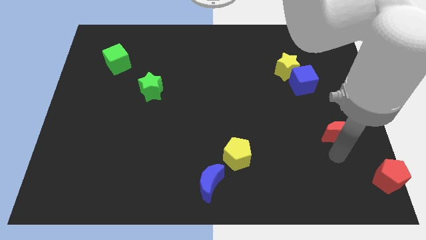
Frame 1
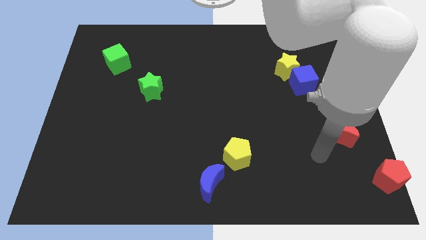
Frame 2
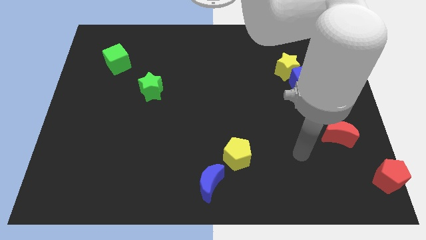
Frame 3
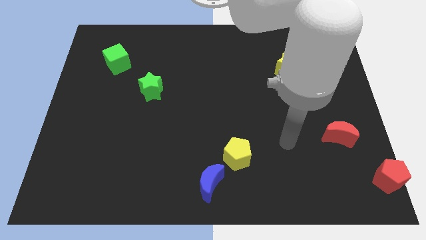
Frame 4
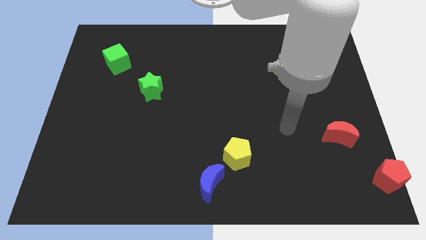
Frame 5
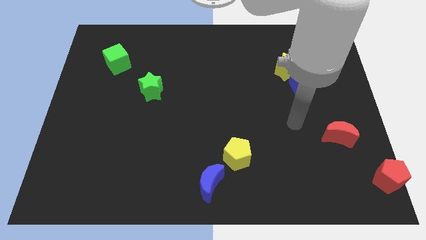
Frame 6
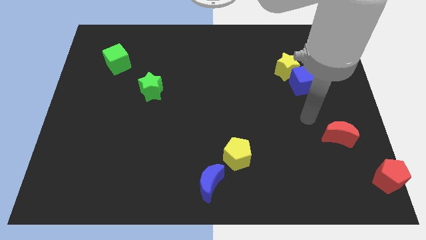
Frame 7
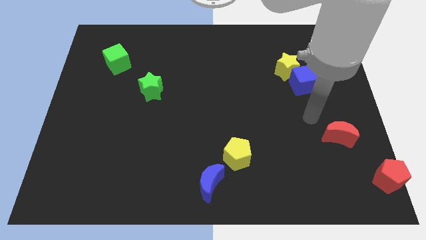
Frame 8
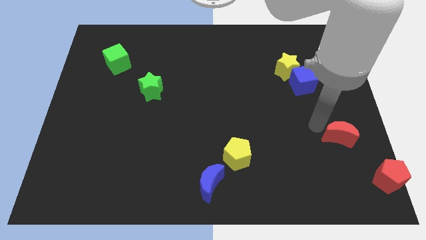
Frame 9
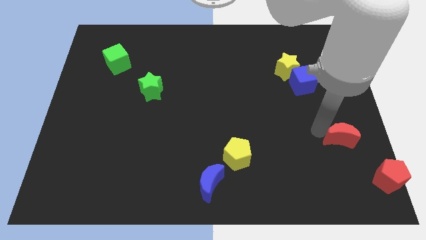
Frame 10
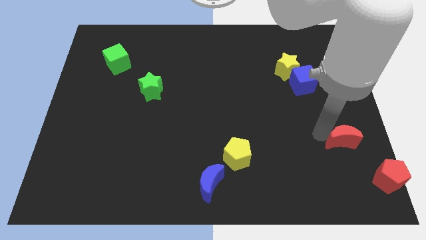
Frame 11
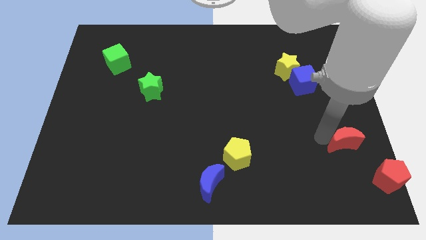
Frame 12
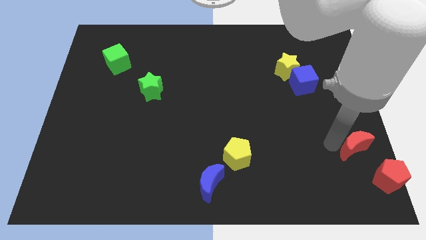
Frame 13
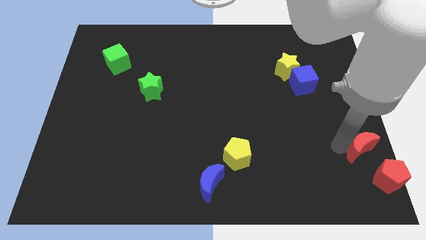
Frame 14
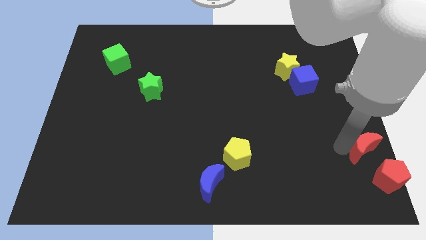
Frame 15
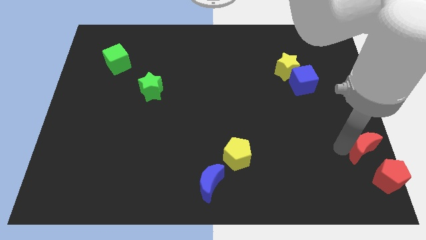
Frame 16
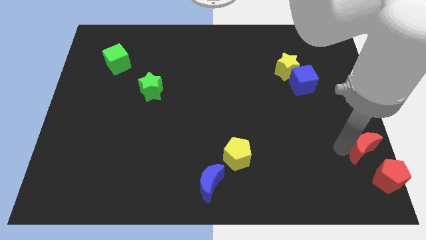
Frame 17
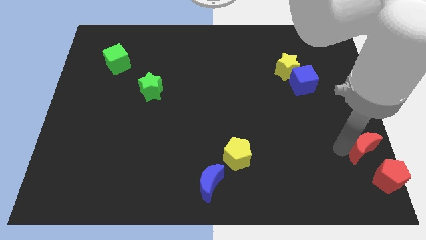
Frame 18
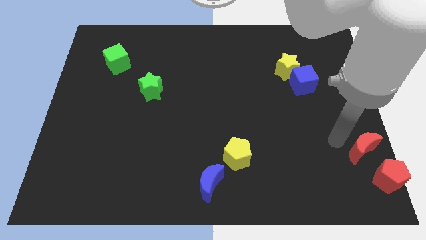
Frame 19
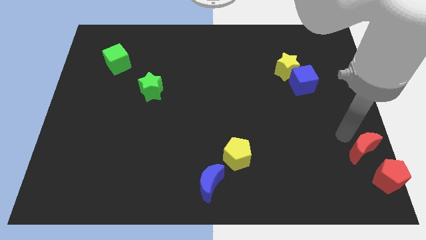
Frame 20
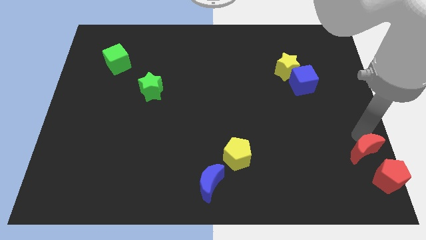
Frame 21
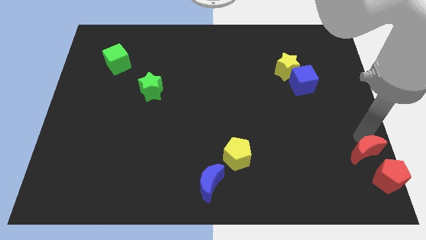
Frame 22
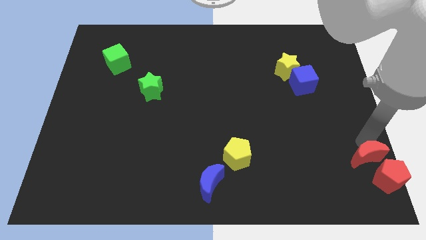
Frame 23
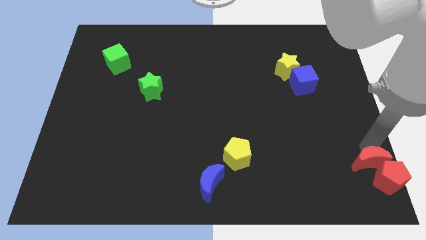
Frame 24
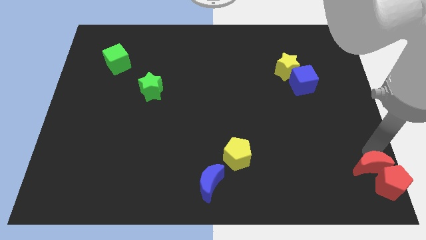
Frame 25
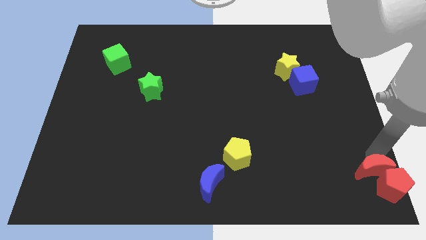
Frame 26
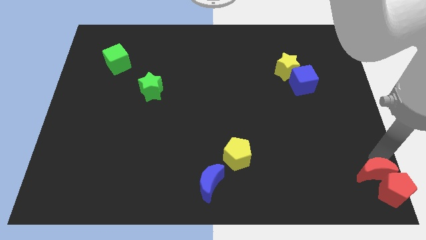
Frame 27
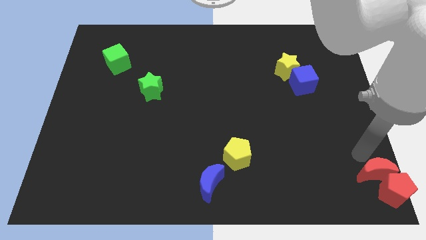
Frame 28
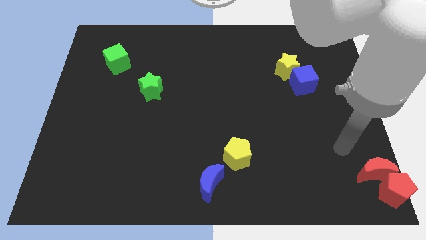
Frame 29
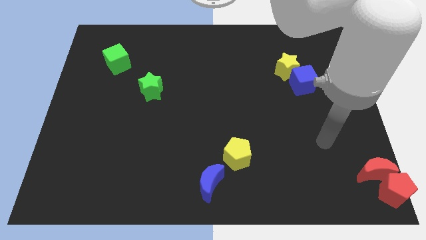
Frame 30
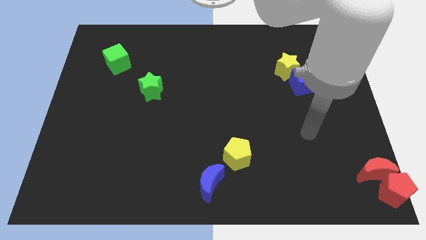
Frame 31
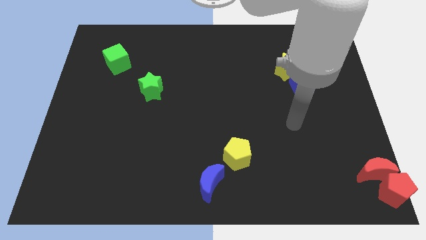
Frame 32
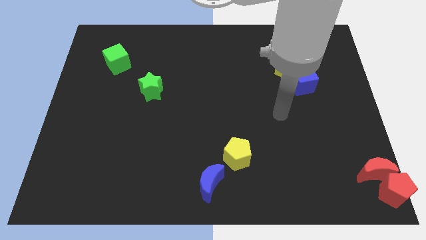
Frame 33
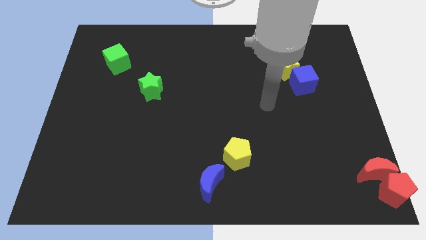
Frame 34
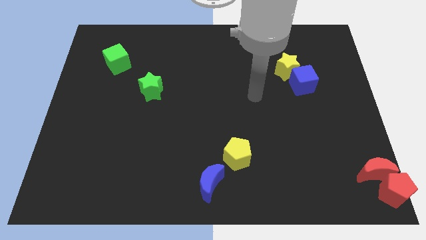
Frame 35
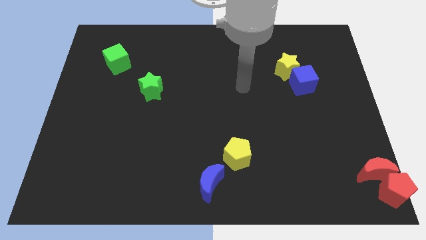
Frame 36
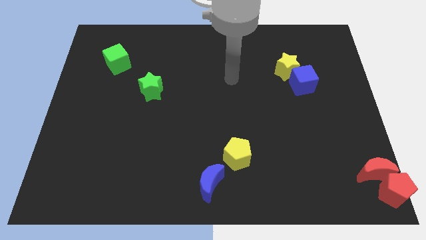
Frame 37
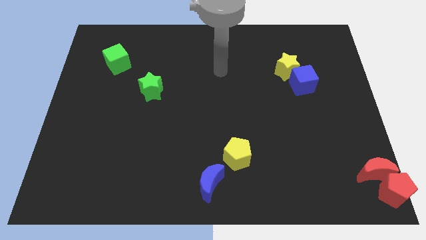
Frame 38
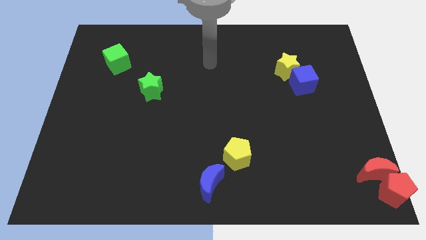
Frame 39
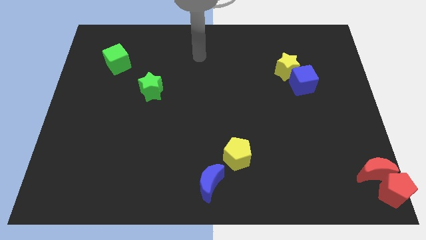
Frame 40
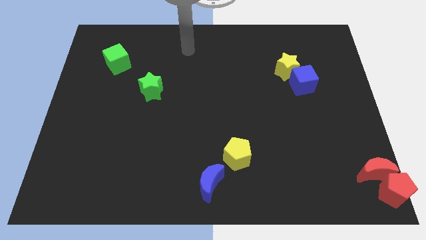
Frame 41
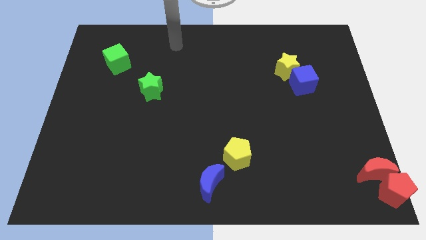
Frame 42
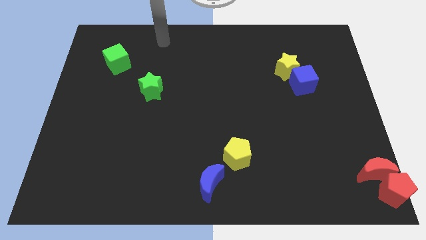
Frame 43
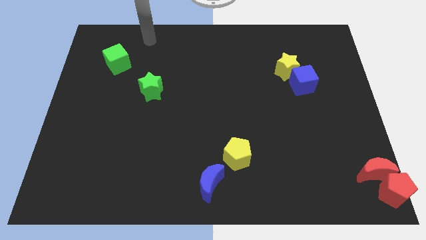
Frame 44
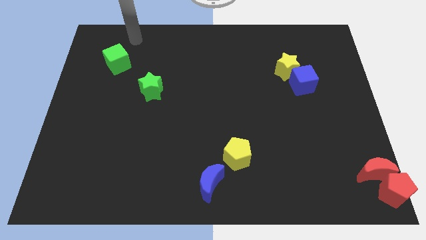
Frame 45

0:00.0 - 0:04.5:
push the red crescent into the red pentagon

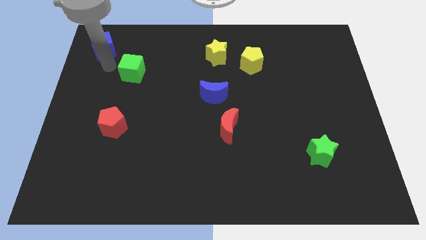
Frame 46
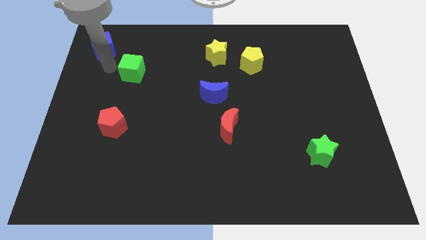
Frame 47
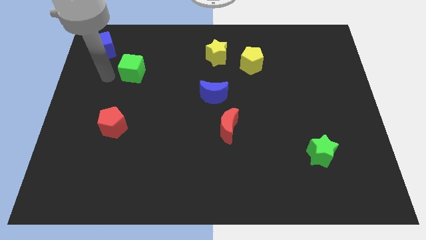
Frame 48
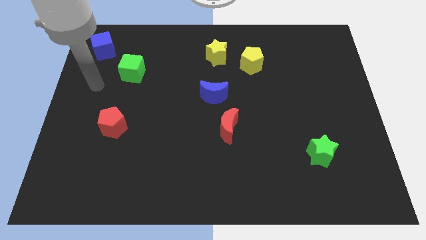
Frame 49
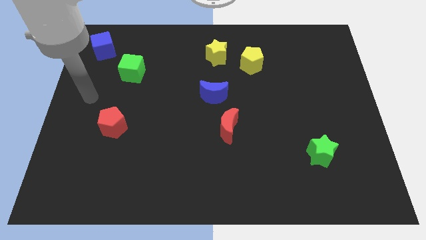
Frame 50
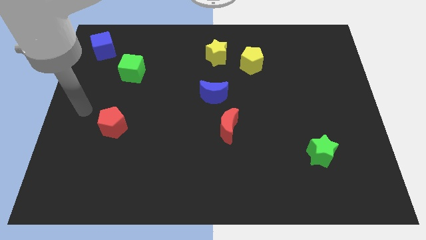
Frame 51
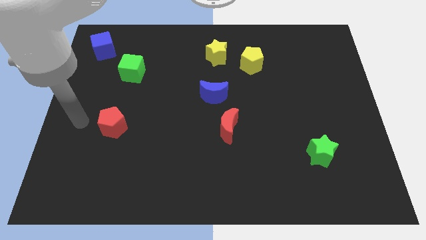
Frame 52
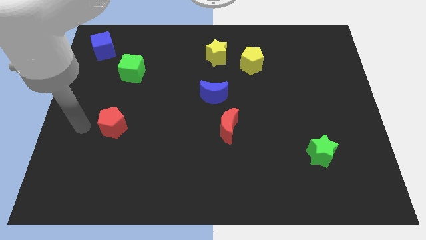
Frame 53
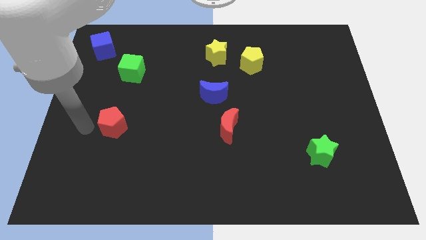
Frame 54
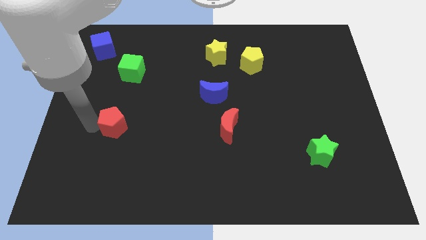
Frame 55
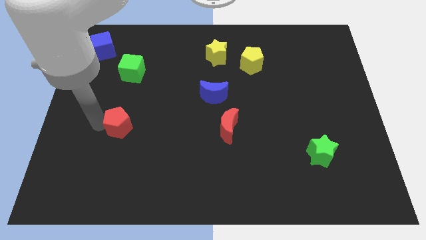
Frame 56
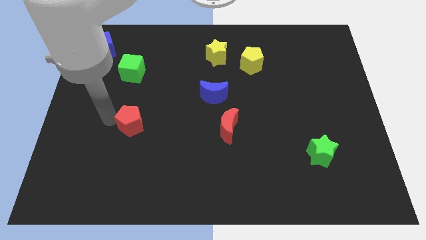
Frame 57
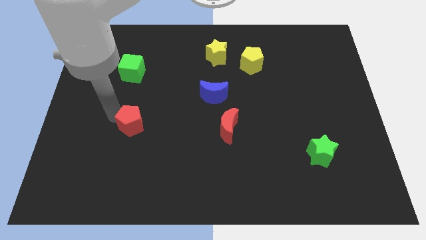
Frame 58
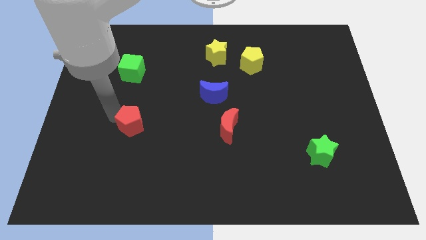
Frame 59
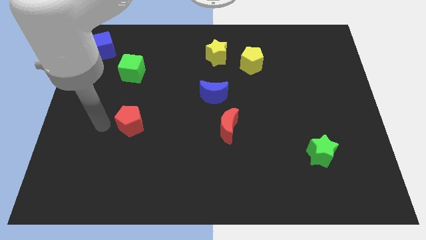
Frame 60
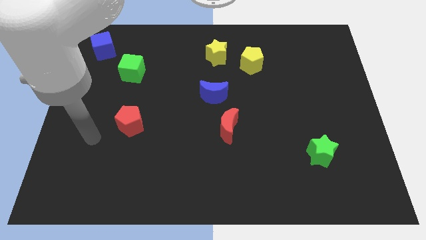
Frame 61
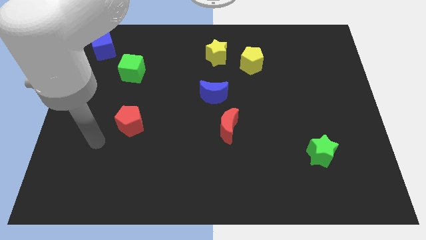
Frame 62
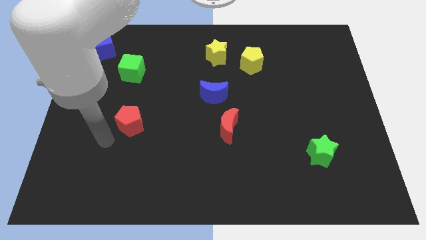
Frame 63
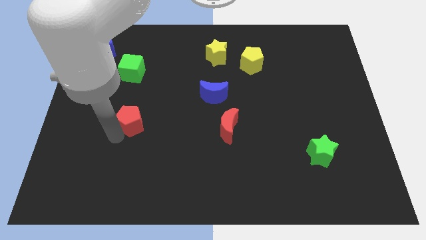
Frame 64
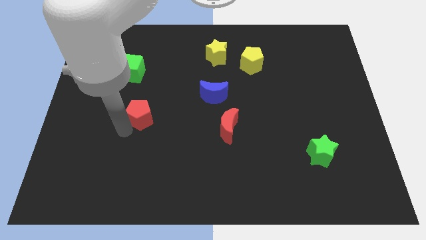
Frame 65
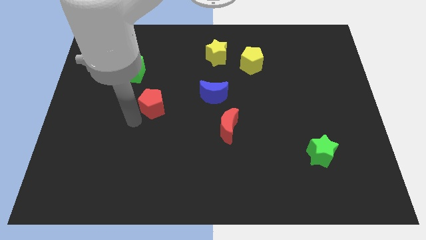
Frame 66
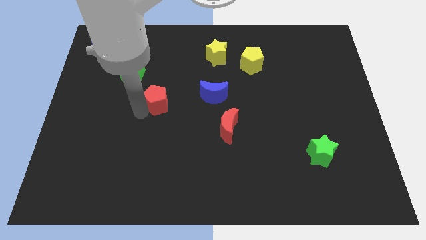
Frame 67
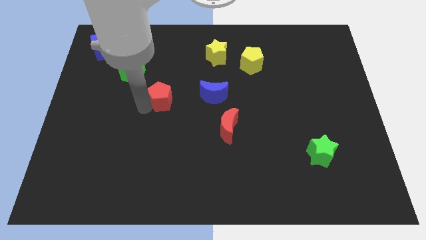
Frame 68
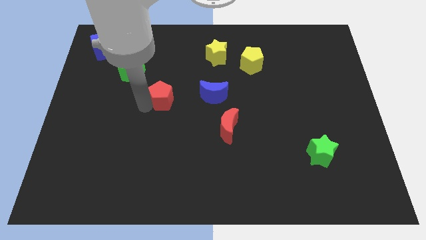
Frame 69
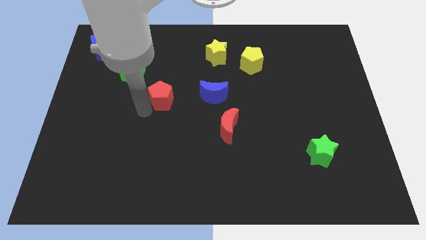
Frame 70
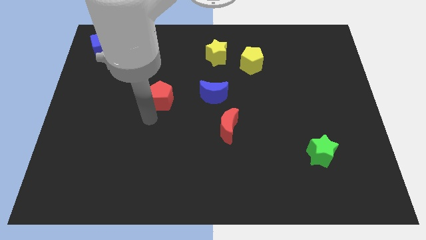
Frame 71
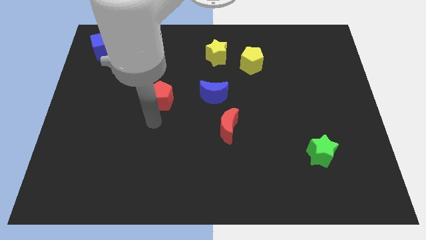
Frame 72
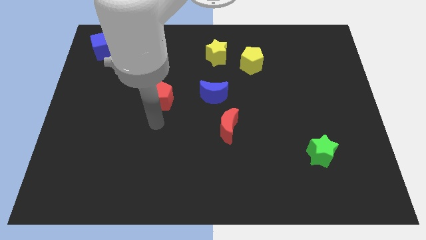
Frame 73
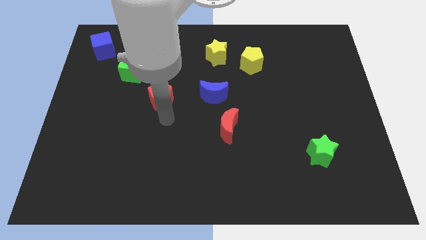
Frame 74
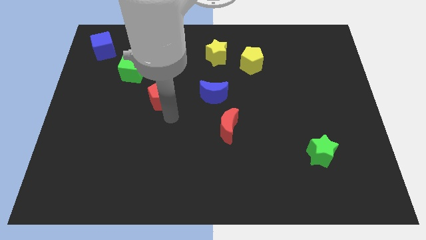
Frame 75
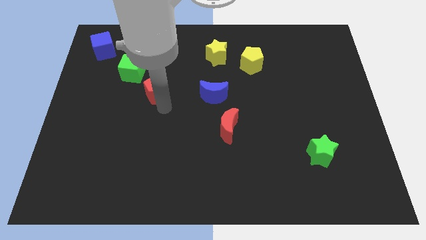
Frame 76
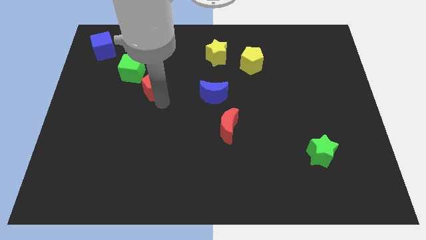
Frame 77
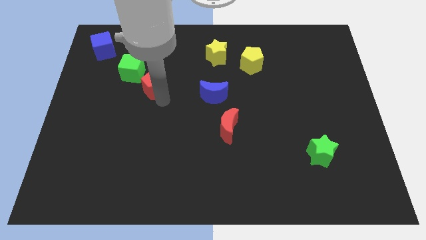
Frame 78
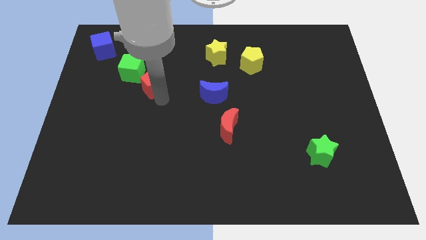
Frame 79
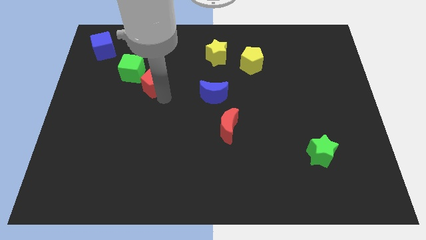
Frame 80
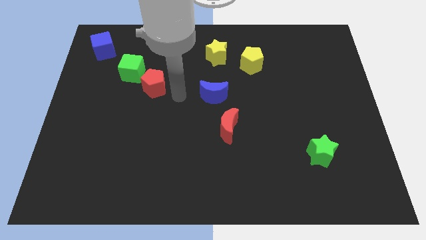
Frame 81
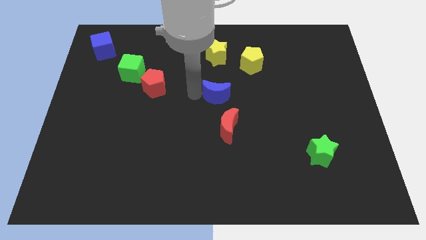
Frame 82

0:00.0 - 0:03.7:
place the red pentagon below the green cube

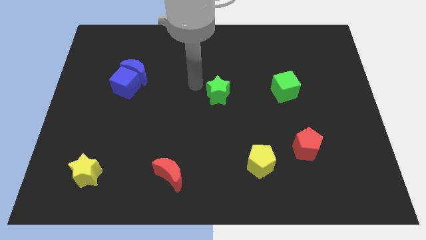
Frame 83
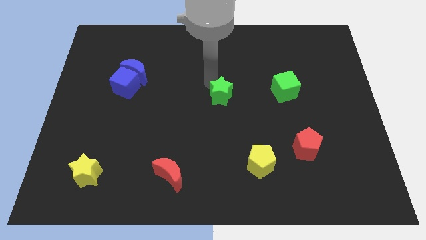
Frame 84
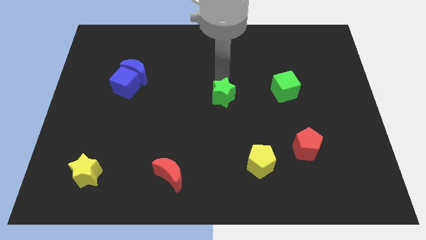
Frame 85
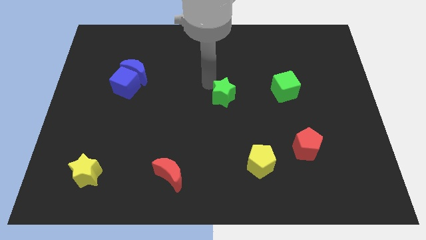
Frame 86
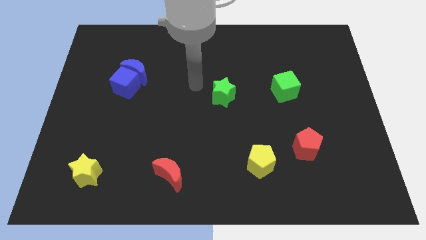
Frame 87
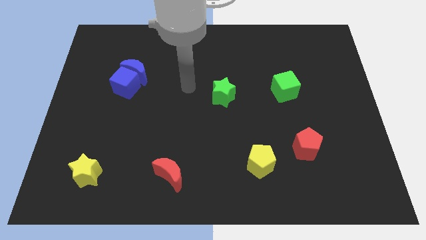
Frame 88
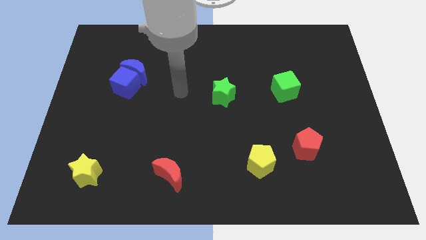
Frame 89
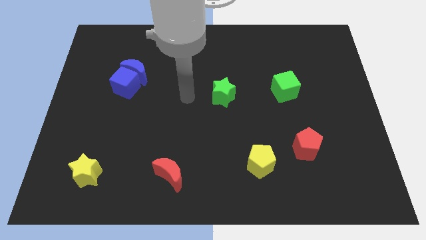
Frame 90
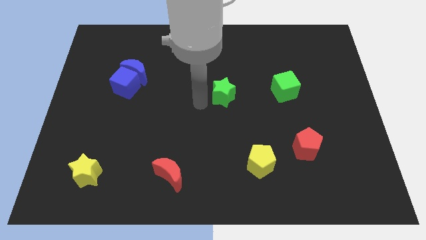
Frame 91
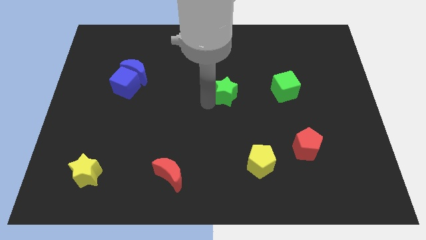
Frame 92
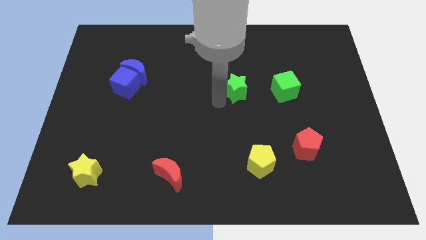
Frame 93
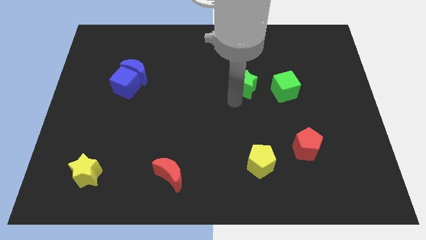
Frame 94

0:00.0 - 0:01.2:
move the green star towards the green cube
